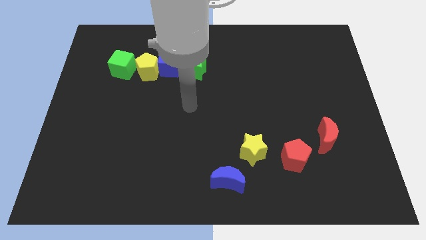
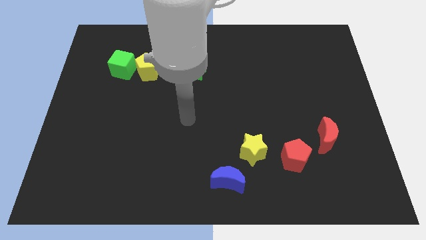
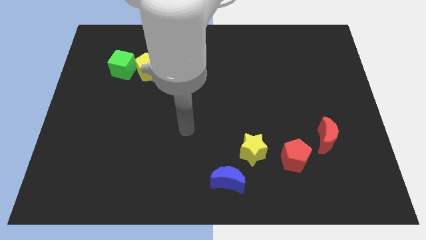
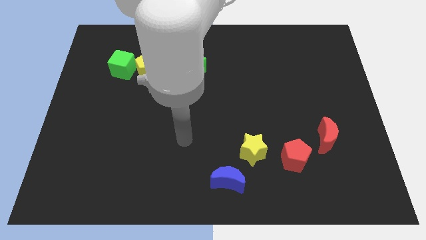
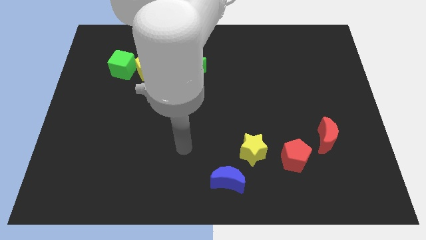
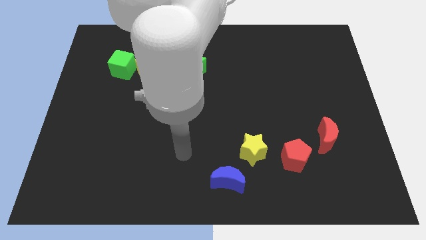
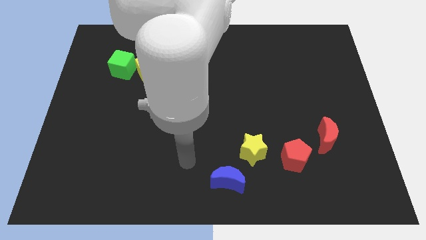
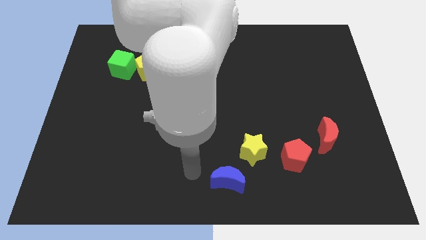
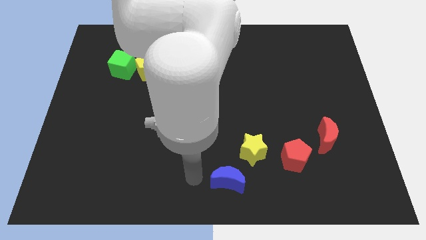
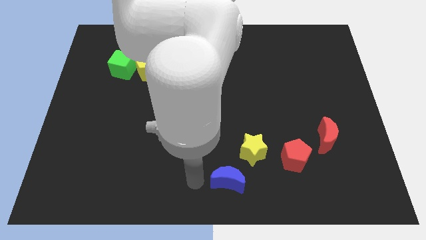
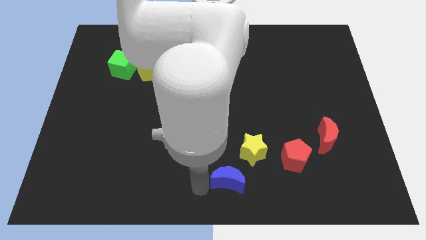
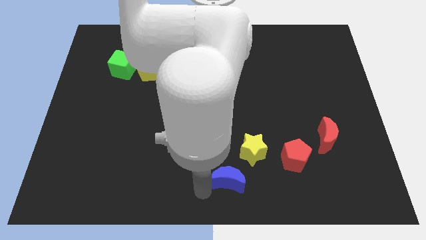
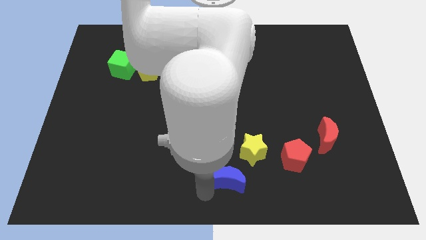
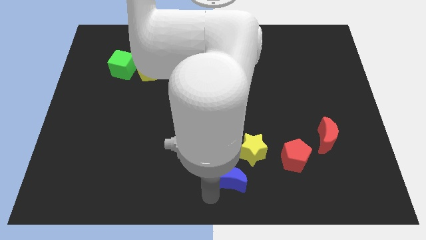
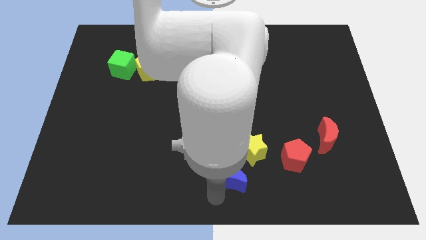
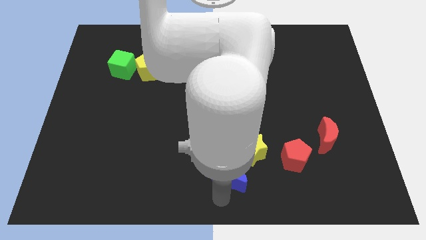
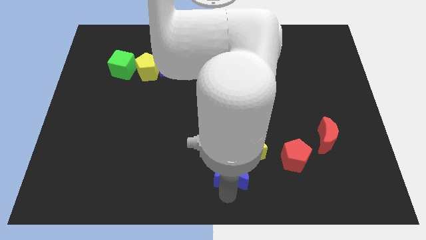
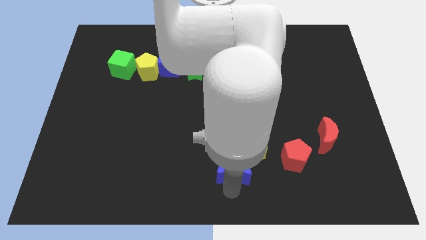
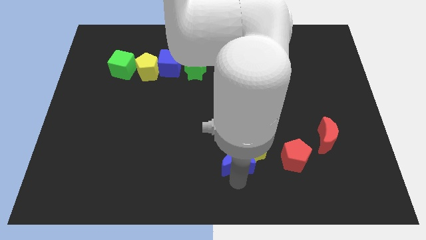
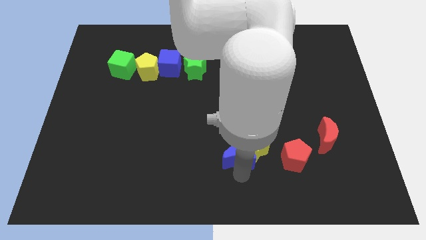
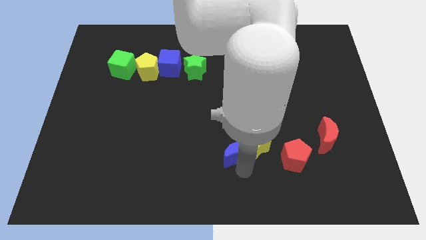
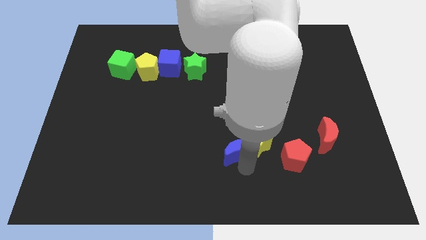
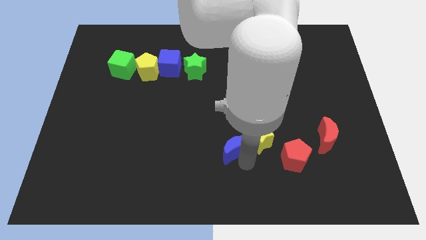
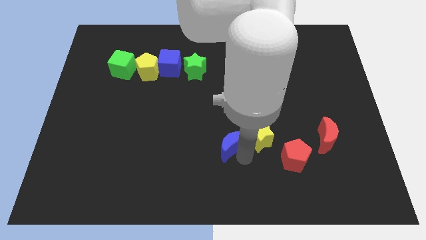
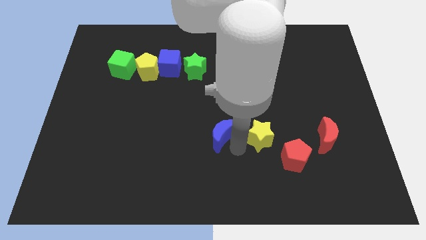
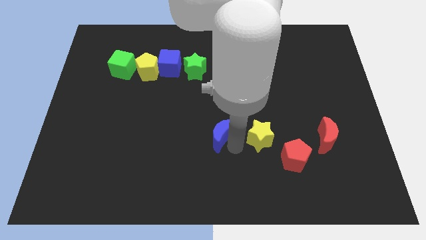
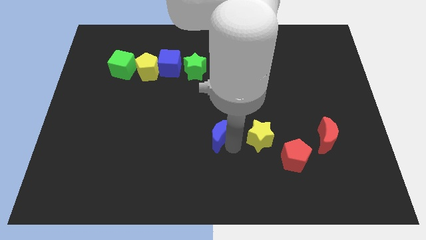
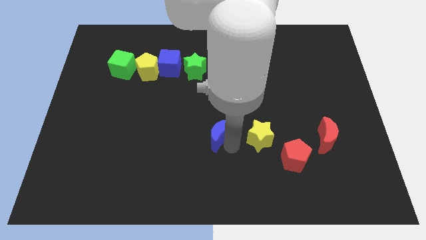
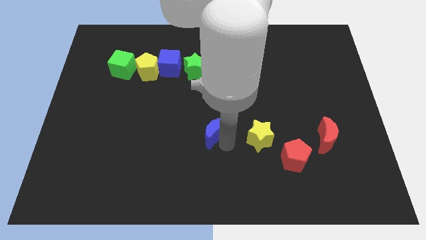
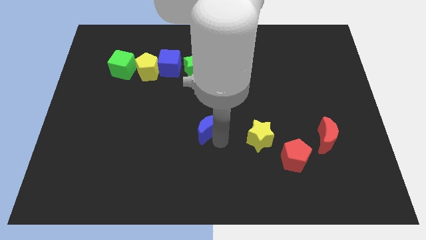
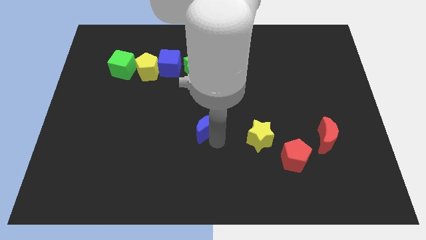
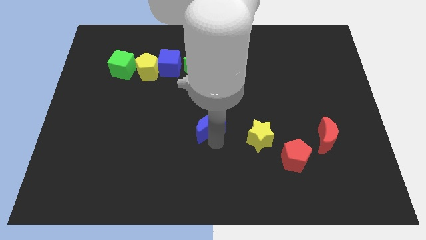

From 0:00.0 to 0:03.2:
put the blue moon parallel left to the yellow star

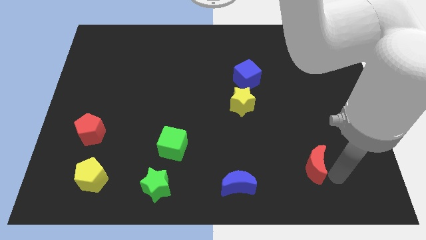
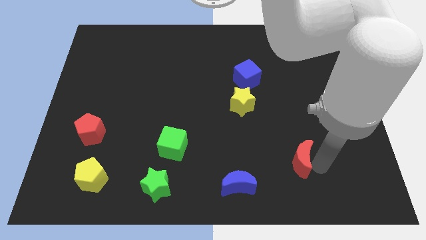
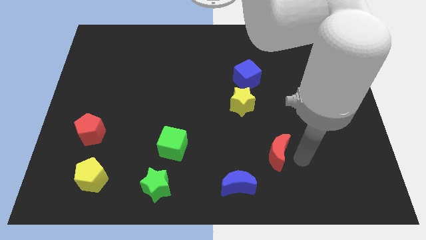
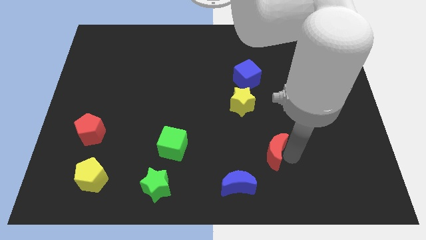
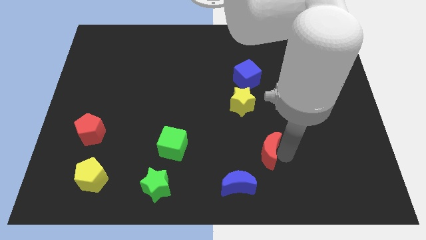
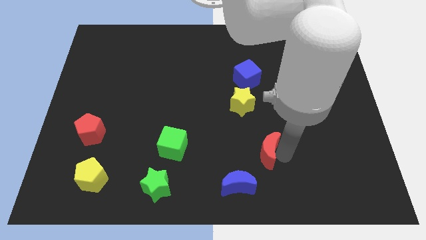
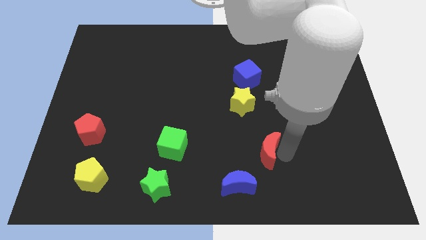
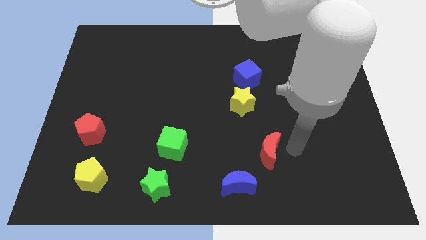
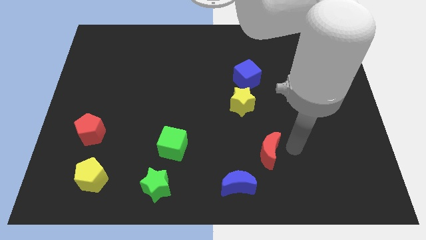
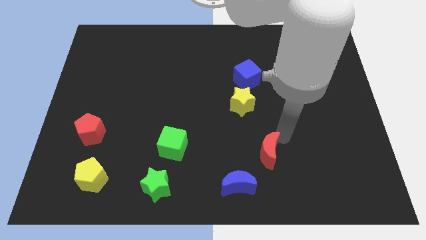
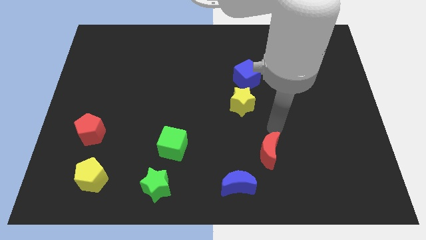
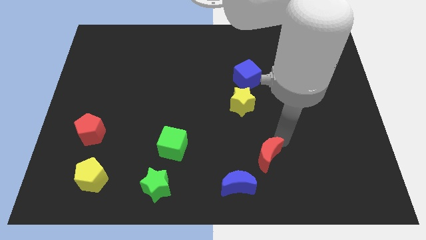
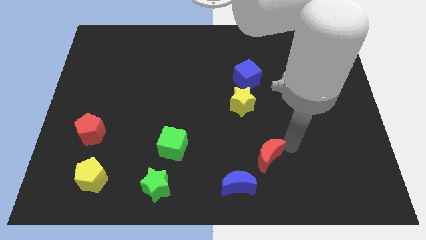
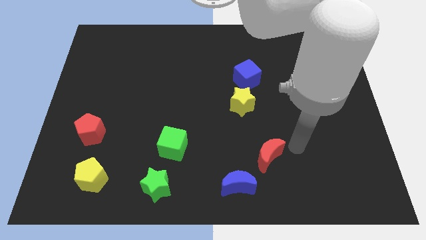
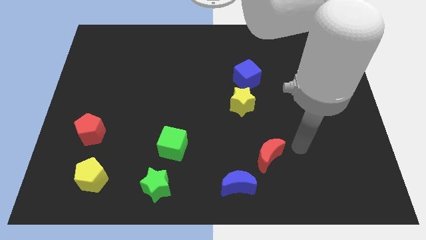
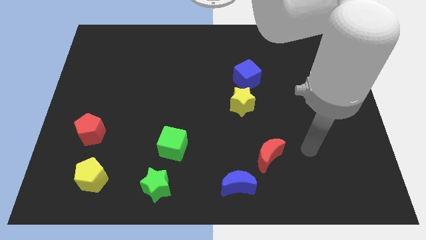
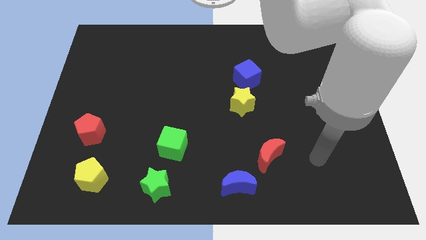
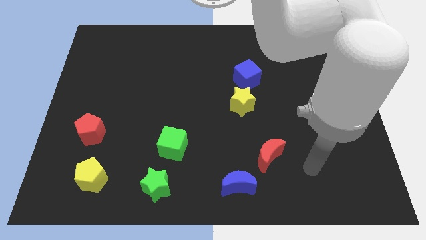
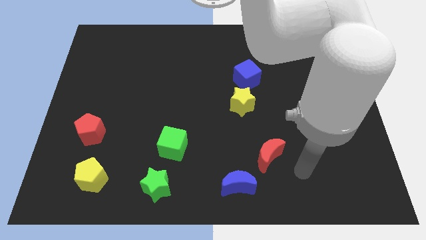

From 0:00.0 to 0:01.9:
push the red moon towards the center of the board

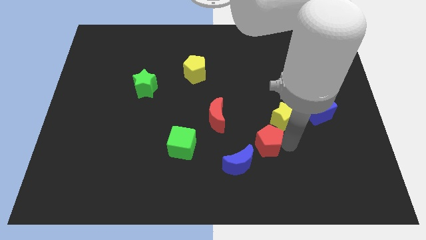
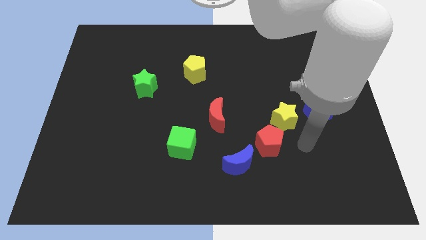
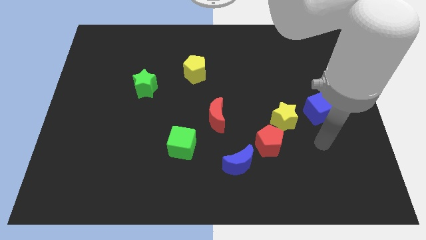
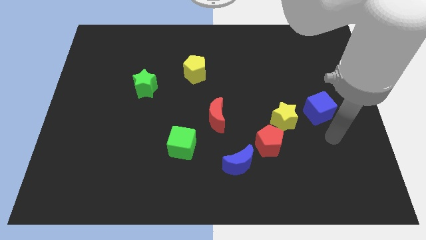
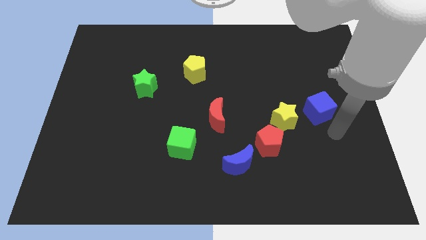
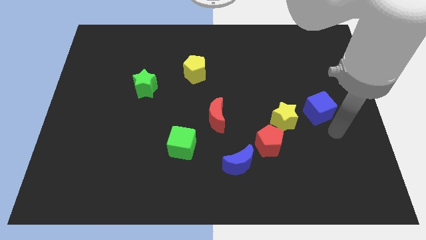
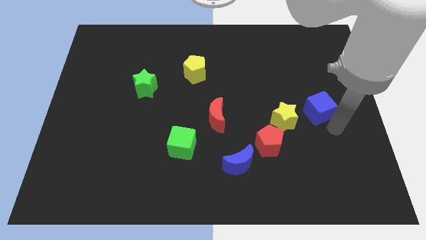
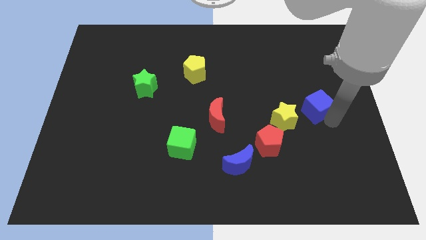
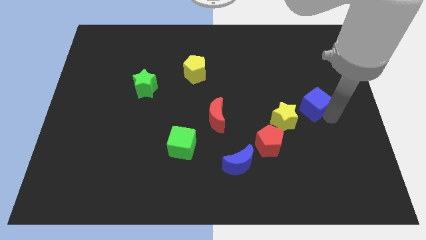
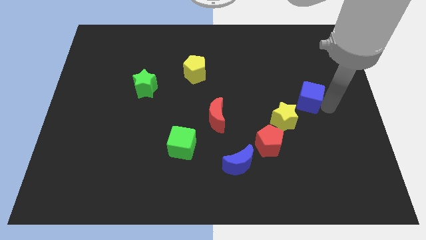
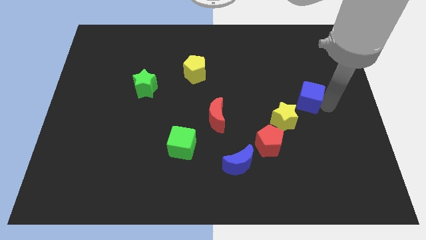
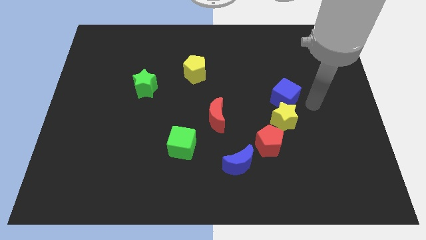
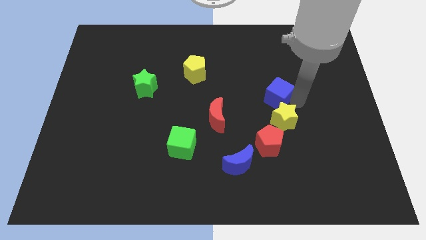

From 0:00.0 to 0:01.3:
place the blue cube above the yellow star

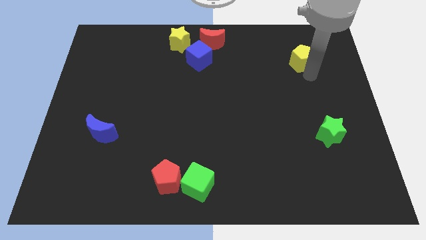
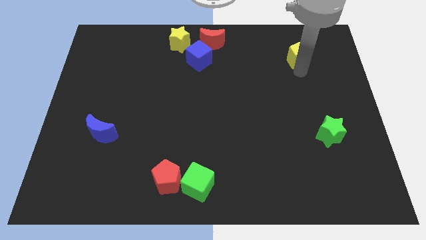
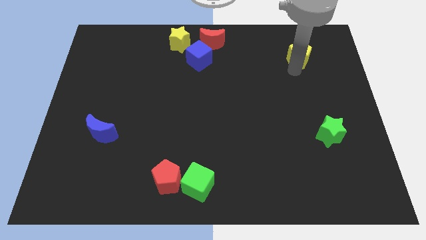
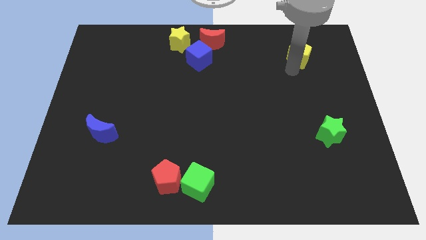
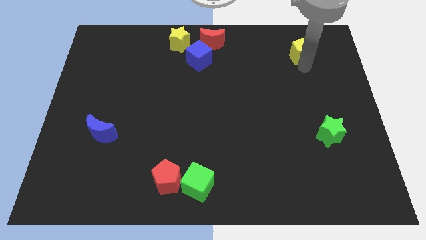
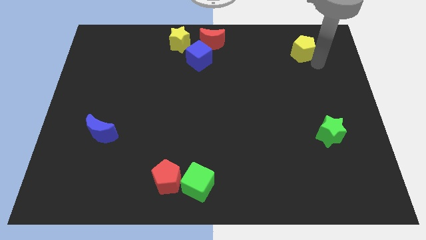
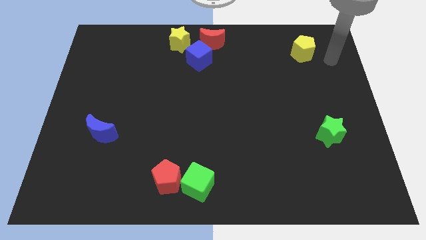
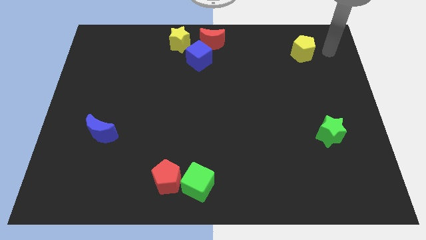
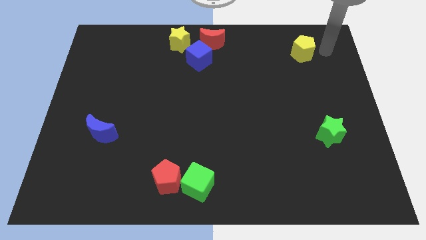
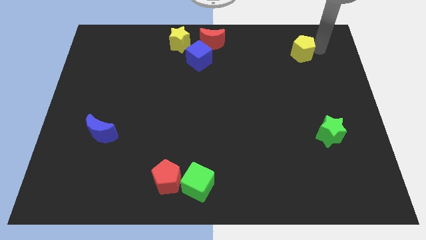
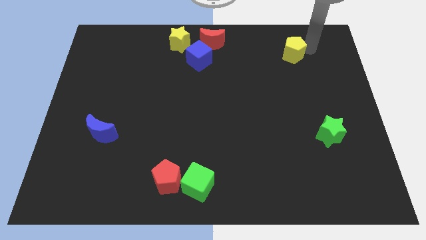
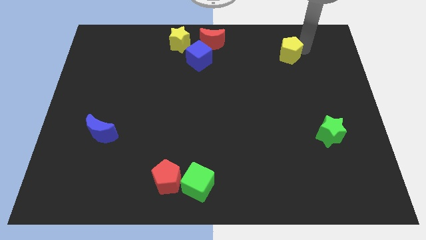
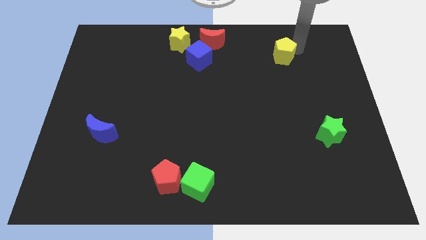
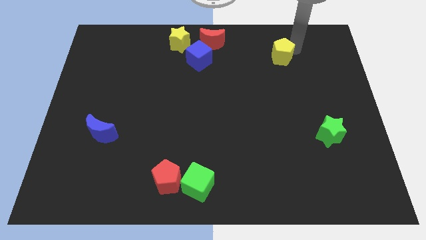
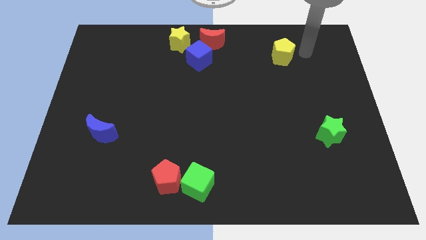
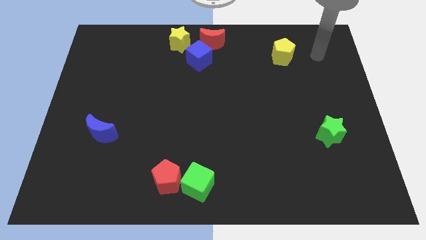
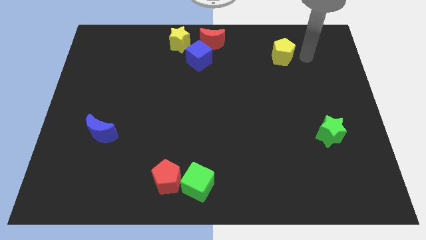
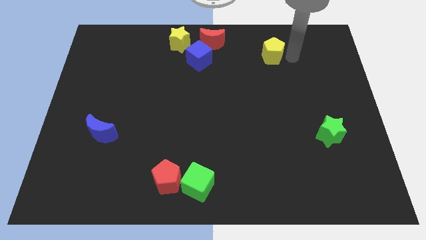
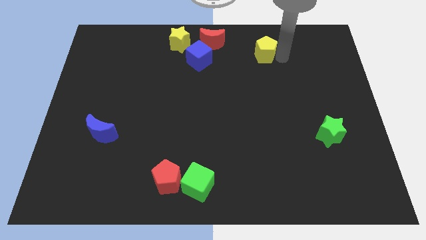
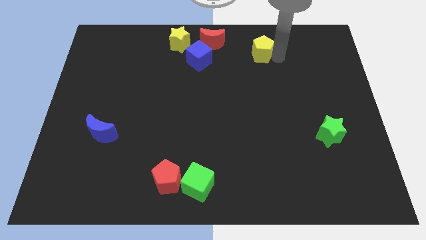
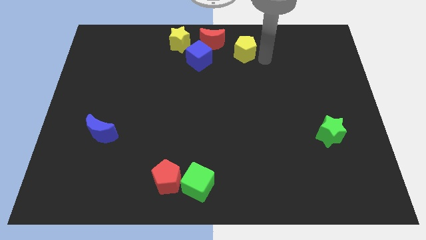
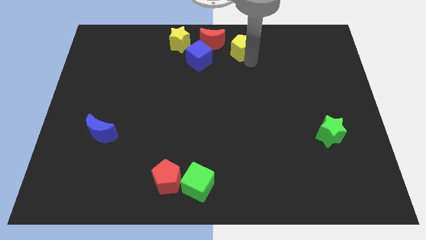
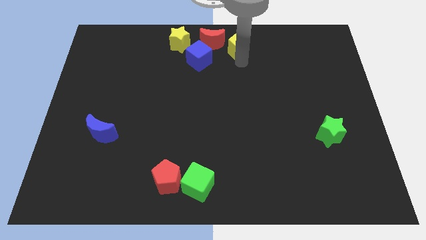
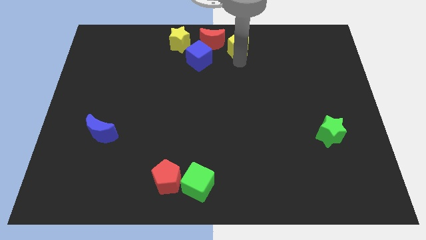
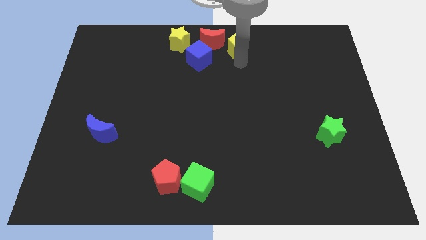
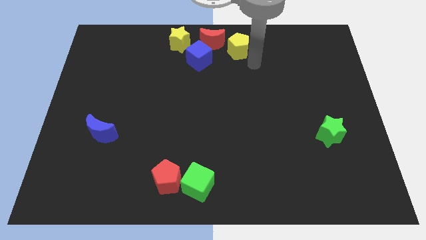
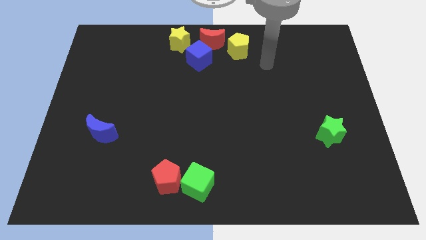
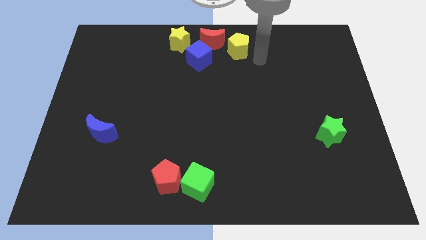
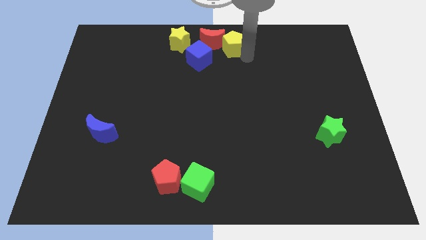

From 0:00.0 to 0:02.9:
move yellow pentagon towards red moon
